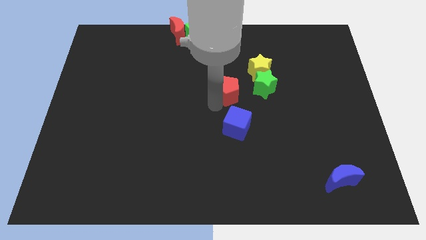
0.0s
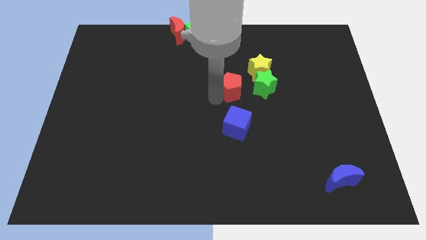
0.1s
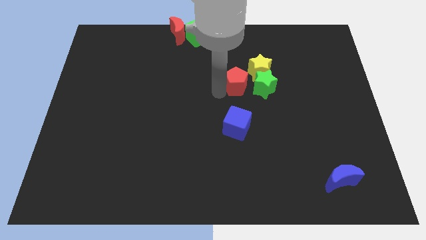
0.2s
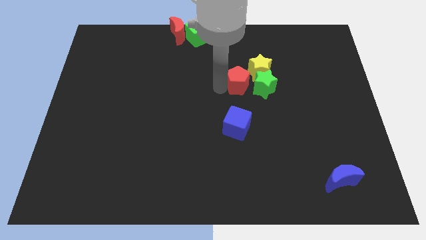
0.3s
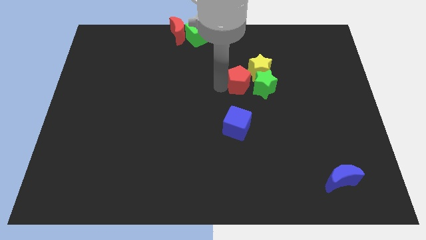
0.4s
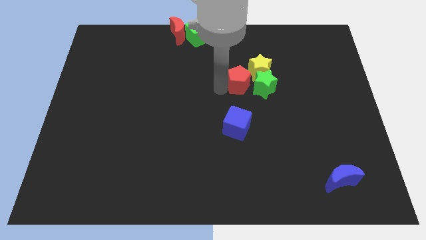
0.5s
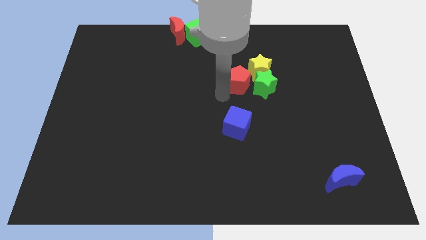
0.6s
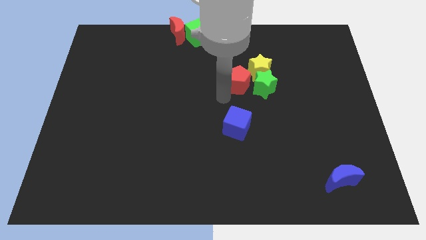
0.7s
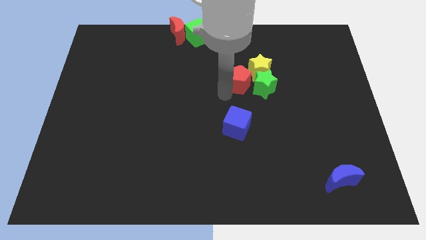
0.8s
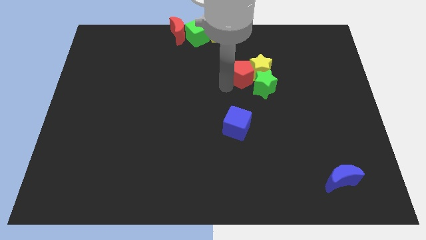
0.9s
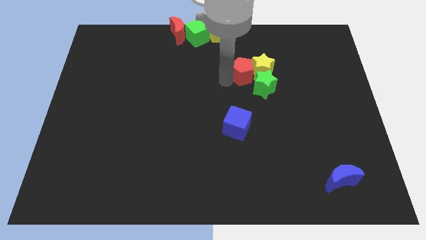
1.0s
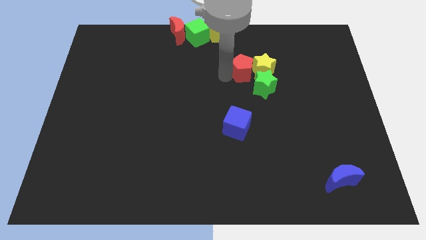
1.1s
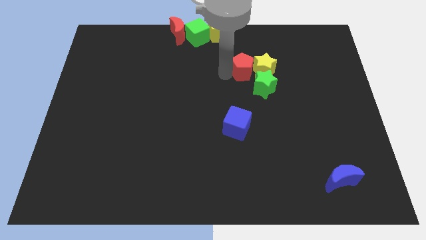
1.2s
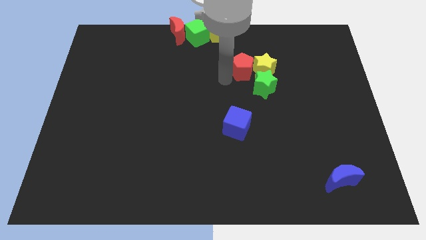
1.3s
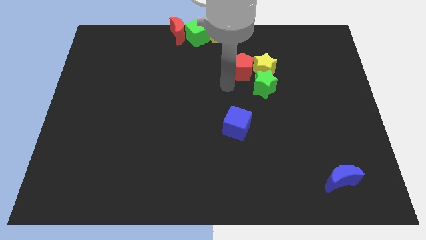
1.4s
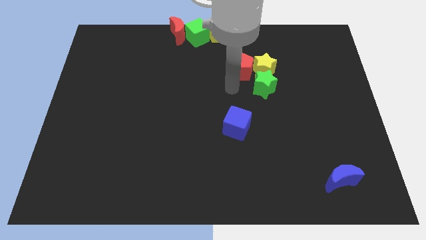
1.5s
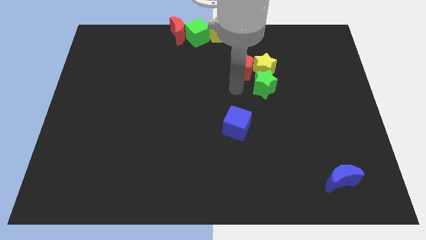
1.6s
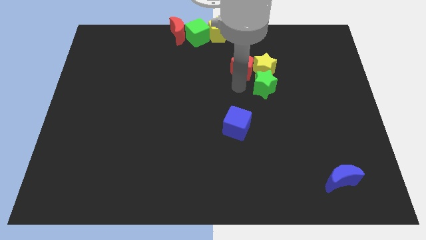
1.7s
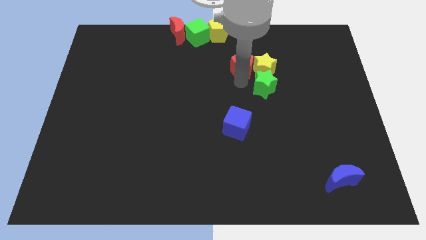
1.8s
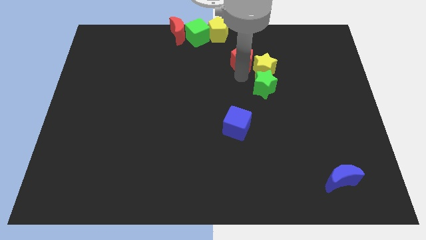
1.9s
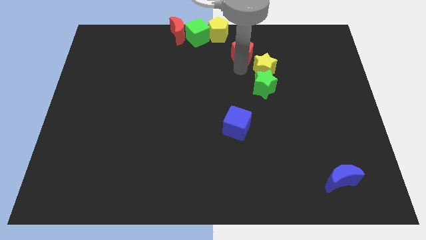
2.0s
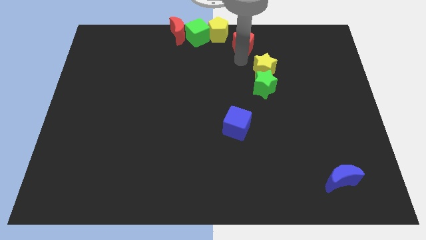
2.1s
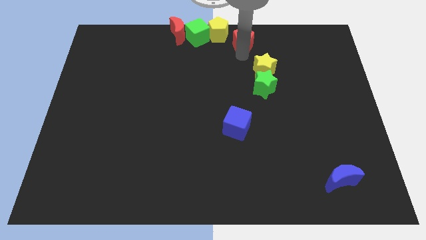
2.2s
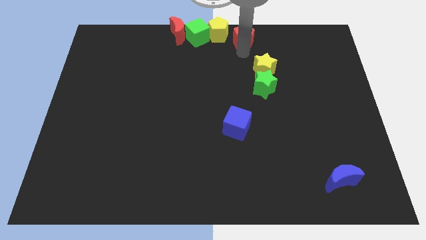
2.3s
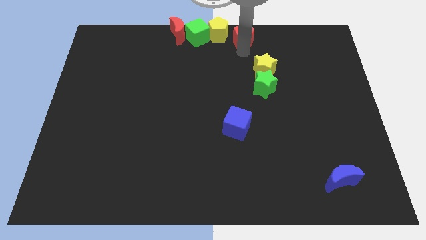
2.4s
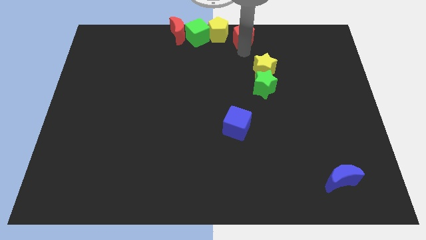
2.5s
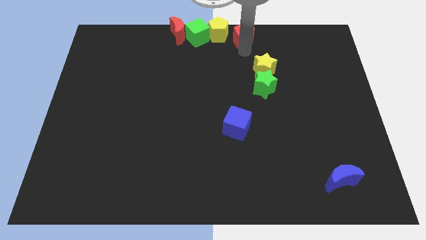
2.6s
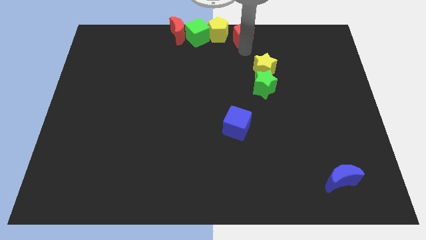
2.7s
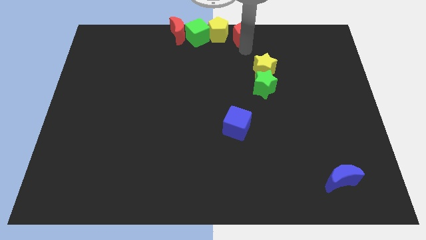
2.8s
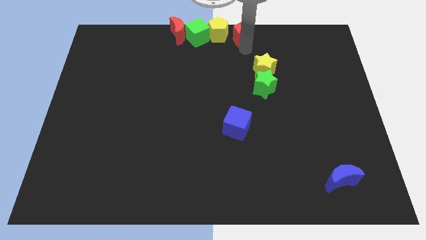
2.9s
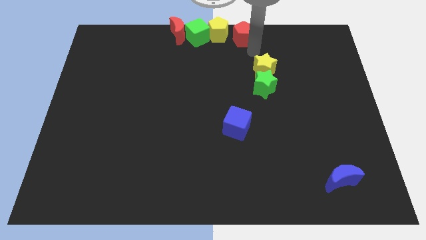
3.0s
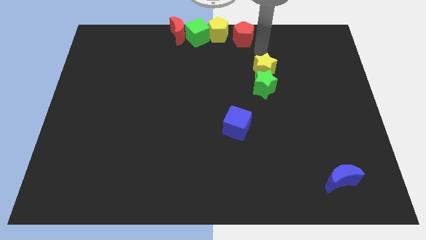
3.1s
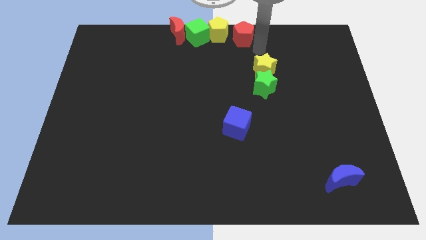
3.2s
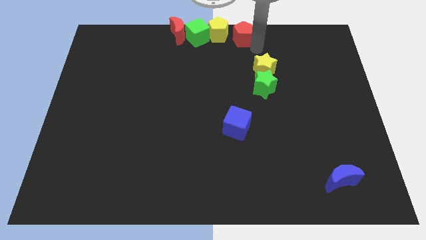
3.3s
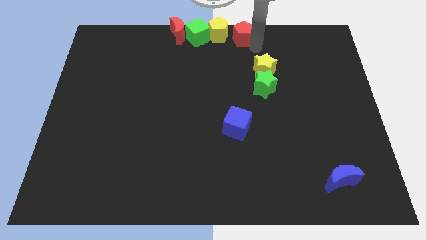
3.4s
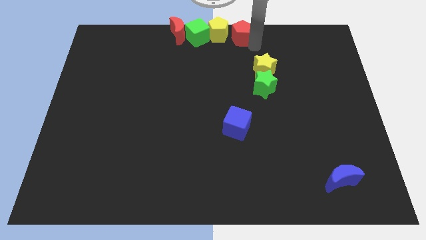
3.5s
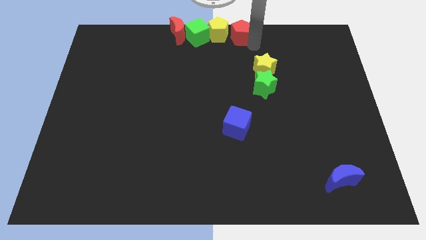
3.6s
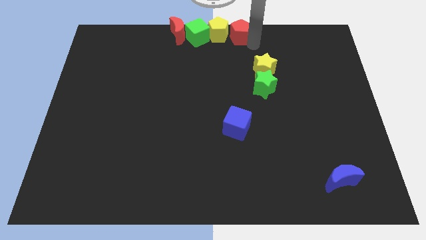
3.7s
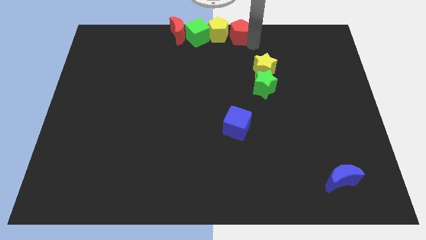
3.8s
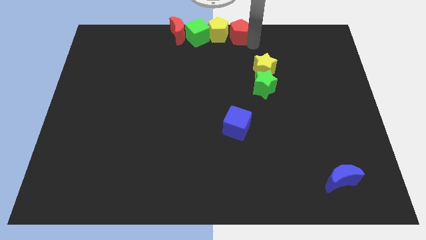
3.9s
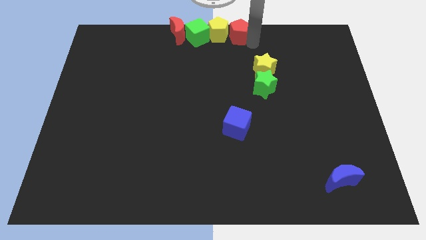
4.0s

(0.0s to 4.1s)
place the red pentagon to the right of the yellow pentagon

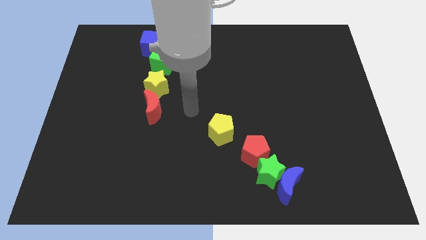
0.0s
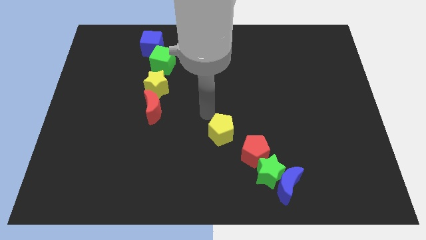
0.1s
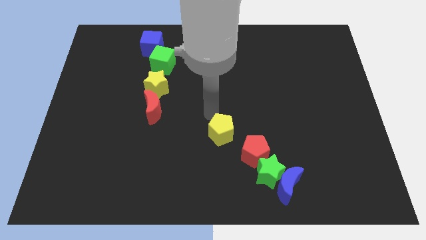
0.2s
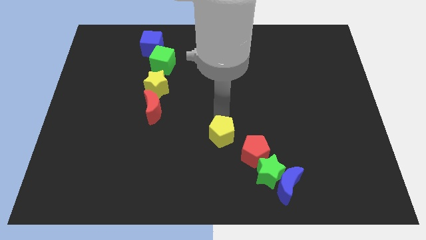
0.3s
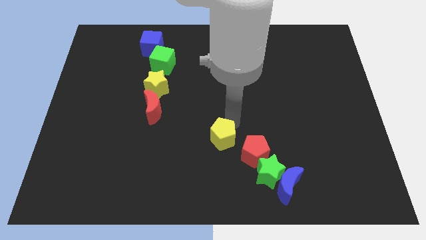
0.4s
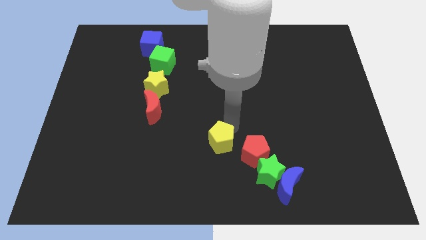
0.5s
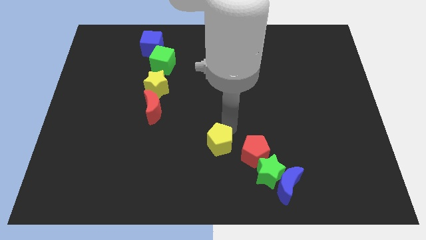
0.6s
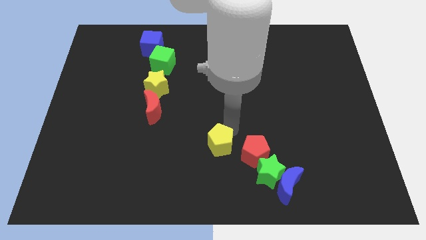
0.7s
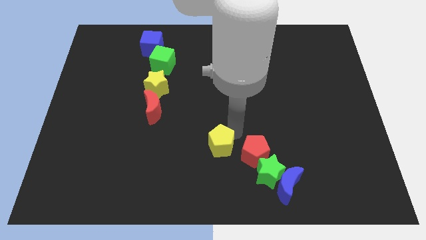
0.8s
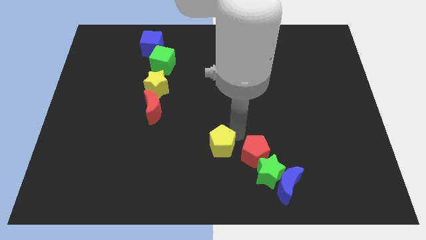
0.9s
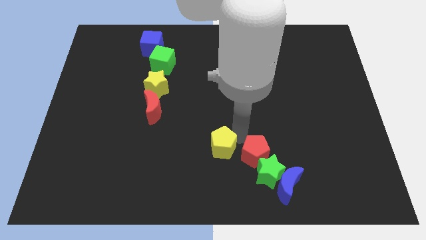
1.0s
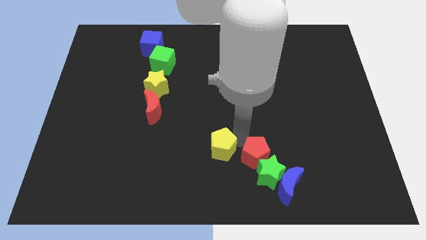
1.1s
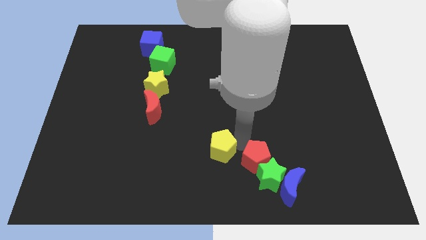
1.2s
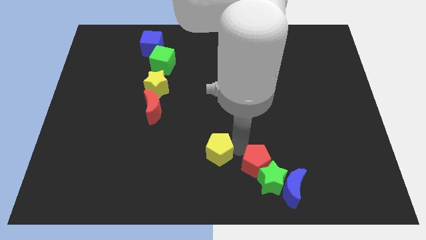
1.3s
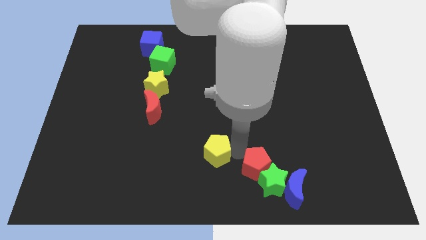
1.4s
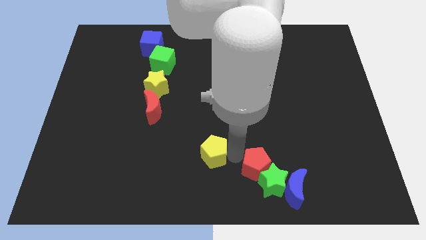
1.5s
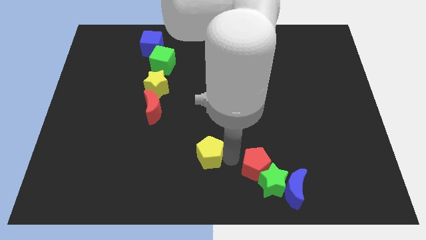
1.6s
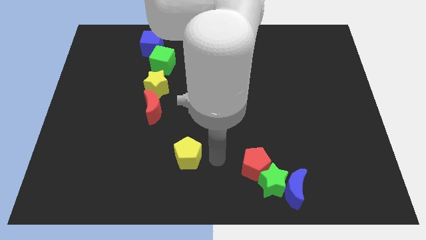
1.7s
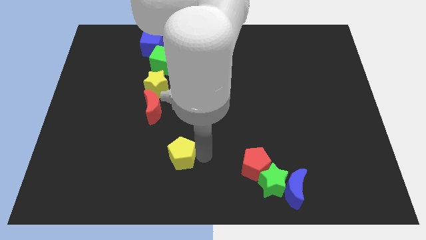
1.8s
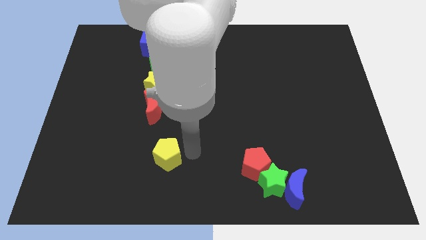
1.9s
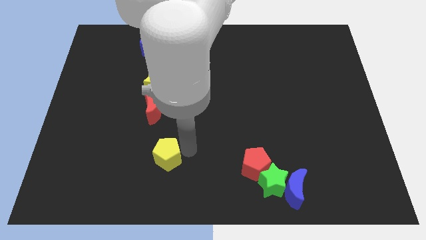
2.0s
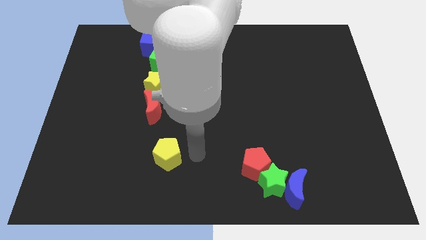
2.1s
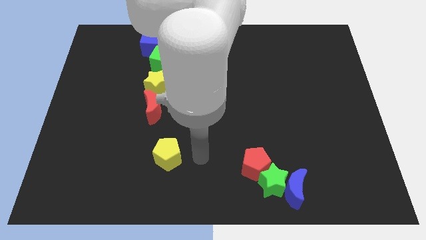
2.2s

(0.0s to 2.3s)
move the yellow pentagon to the bottom of the red moon

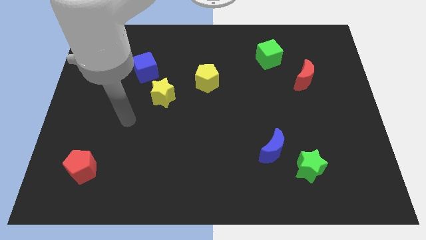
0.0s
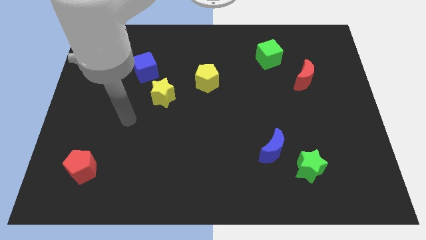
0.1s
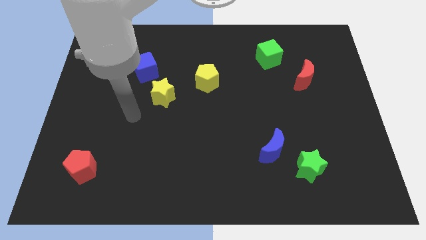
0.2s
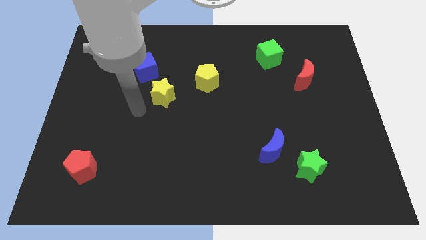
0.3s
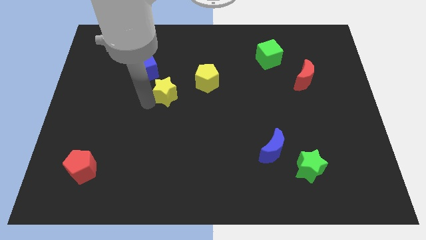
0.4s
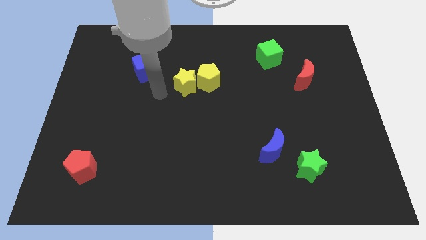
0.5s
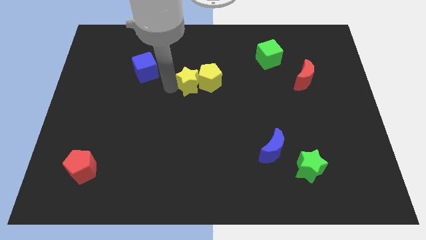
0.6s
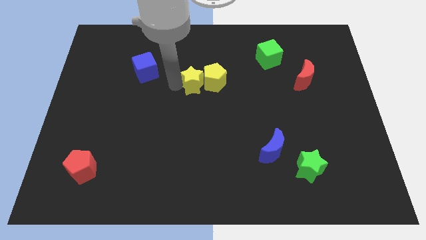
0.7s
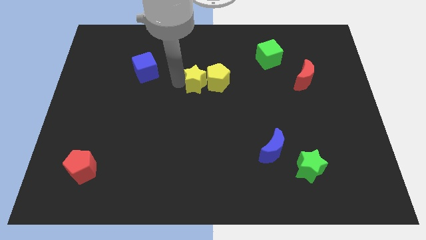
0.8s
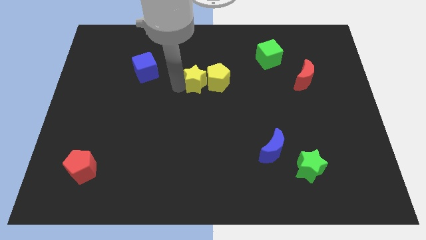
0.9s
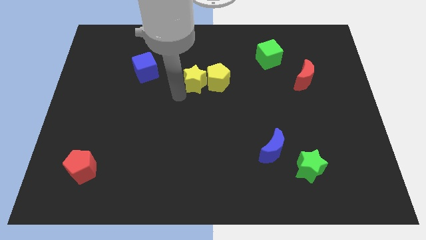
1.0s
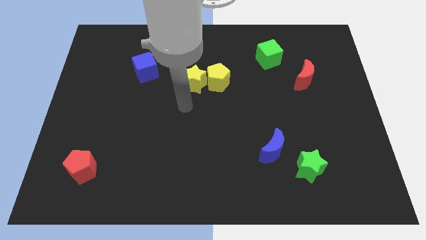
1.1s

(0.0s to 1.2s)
push yellow star in to yellow pentagon

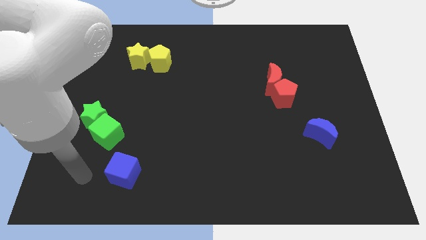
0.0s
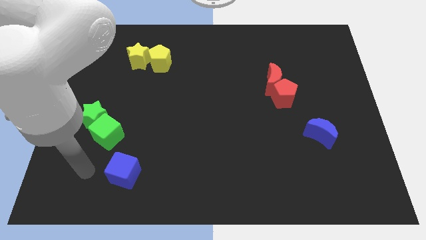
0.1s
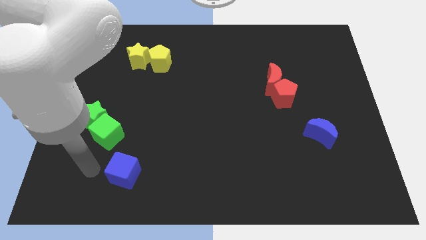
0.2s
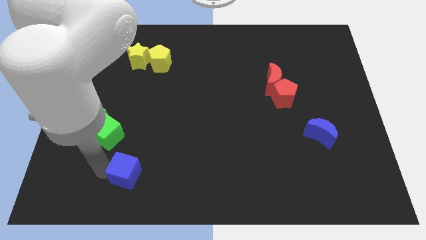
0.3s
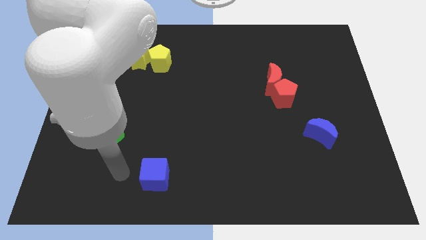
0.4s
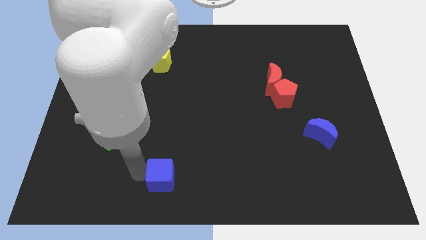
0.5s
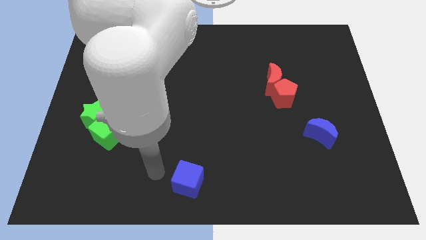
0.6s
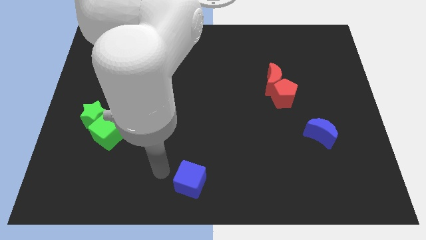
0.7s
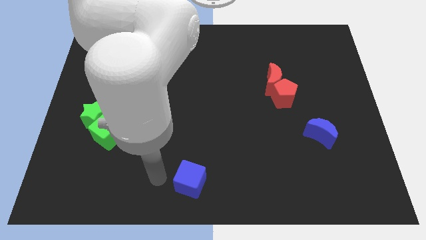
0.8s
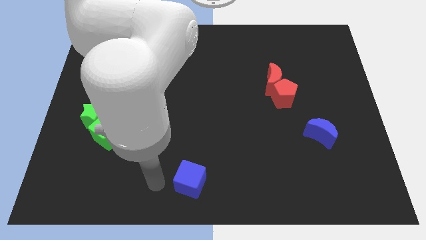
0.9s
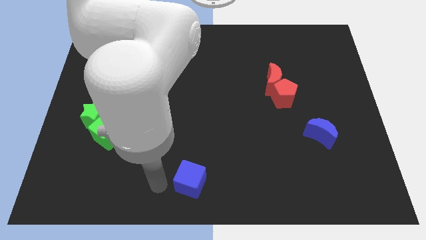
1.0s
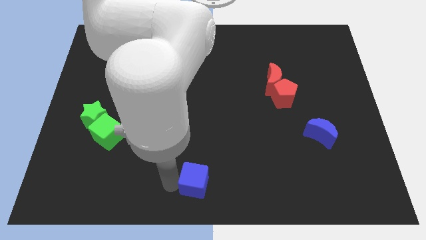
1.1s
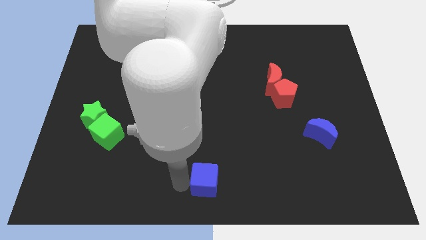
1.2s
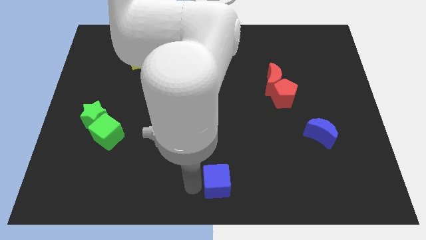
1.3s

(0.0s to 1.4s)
push the blue cube to the bottom center of the board
